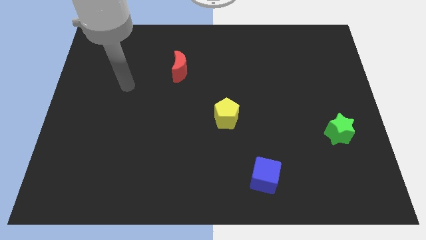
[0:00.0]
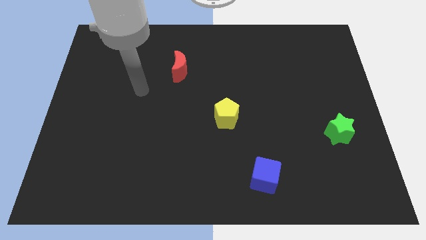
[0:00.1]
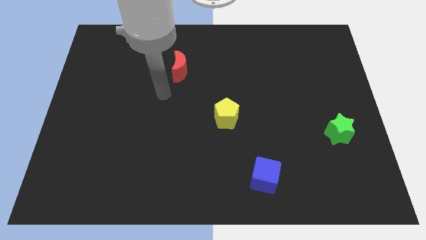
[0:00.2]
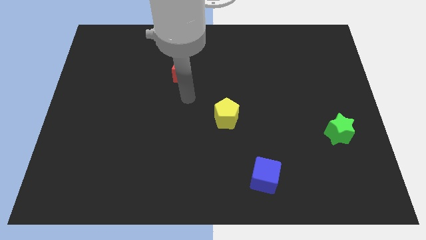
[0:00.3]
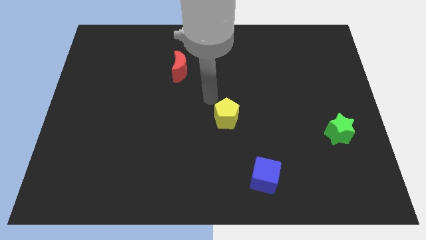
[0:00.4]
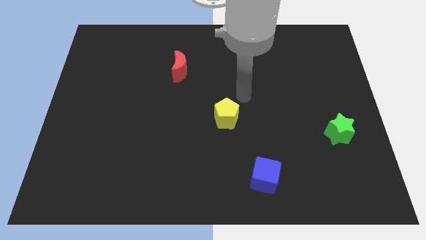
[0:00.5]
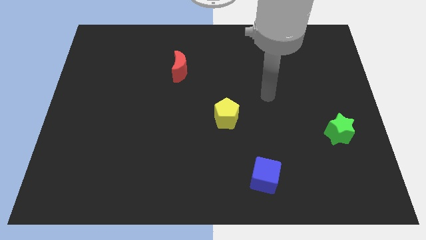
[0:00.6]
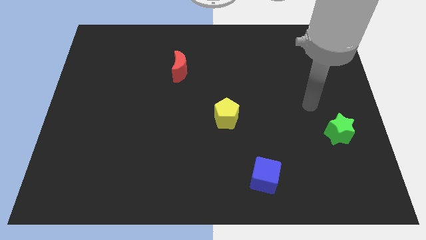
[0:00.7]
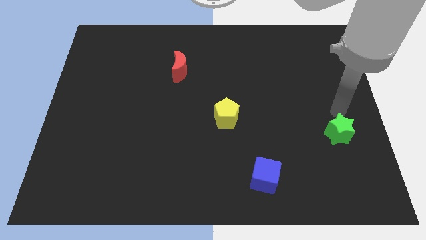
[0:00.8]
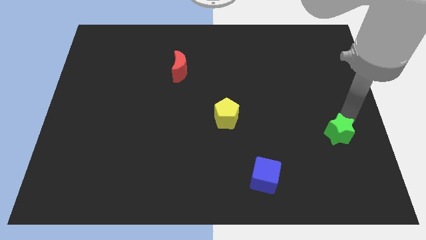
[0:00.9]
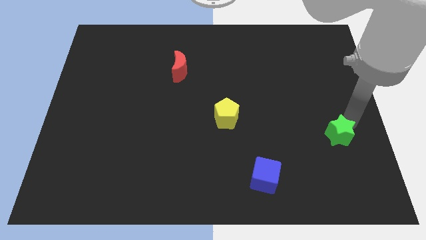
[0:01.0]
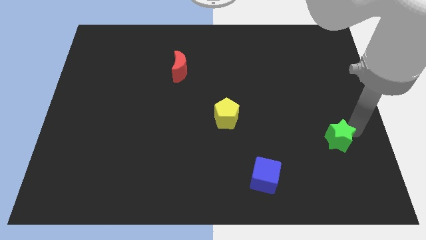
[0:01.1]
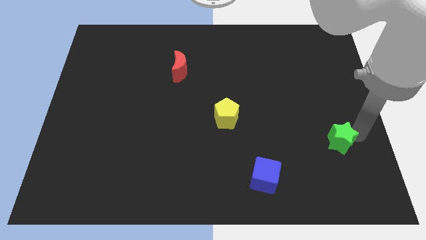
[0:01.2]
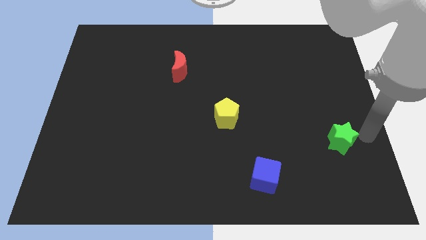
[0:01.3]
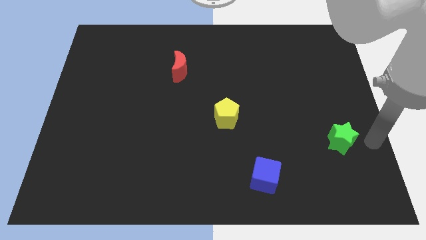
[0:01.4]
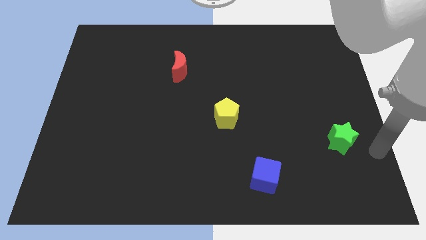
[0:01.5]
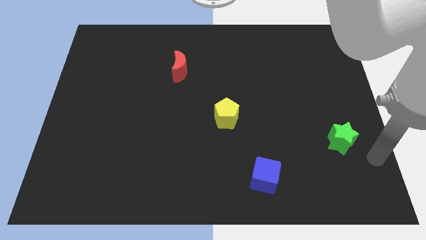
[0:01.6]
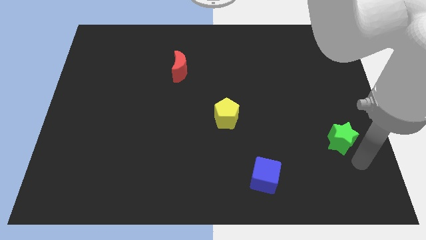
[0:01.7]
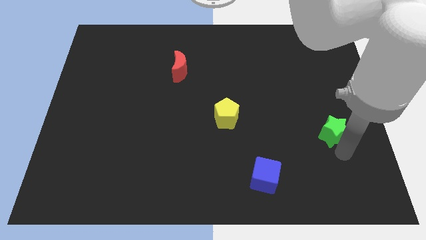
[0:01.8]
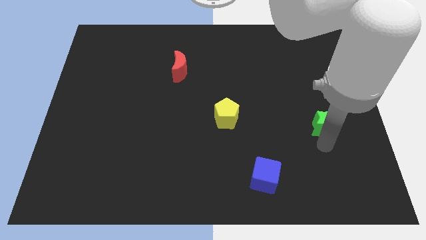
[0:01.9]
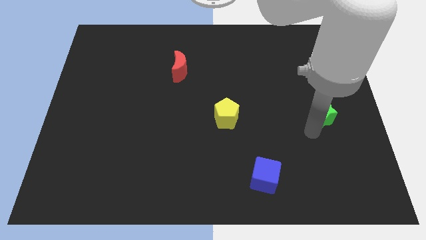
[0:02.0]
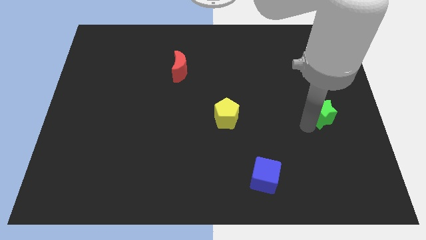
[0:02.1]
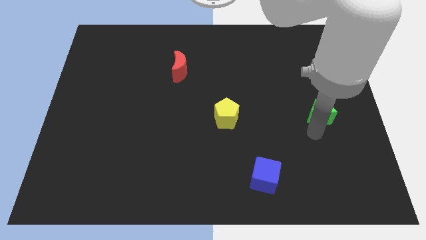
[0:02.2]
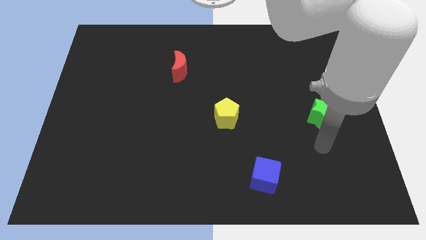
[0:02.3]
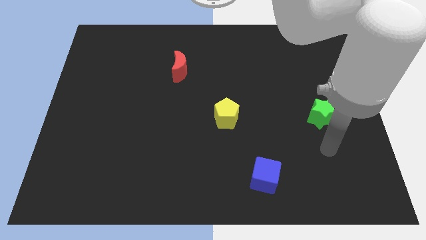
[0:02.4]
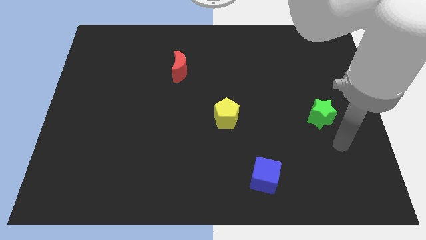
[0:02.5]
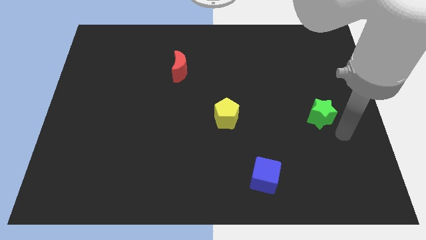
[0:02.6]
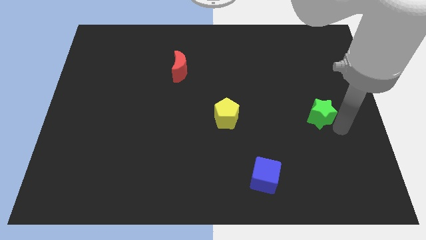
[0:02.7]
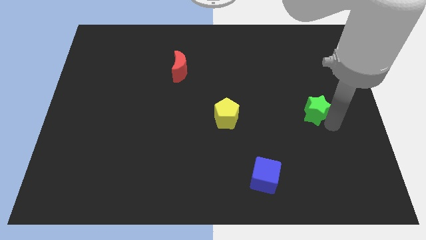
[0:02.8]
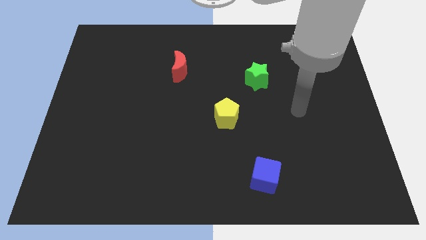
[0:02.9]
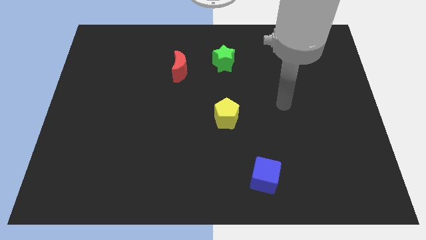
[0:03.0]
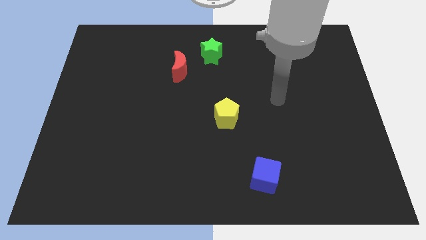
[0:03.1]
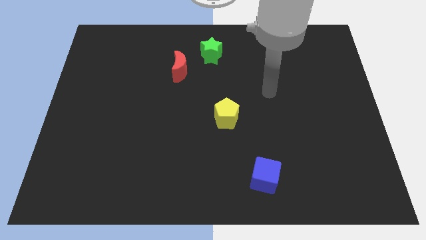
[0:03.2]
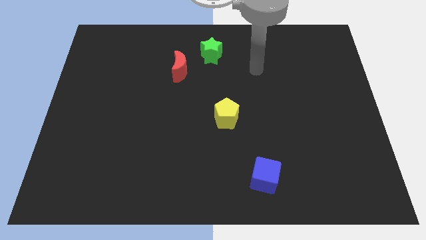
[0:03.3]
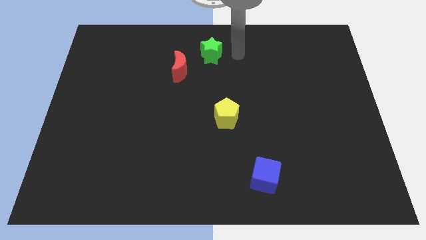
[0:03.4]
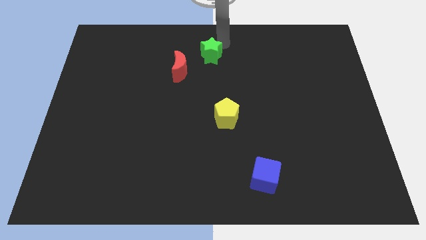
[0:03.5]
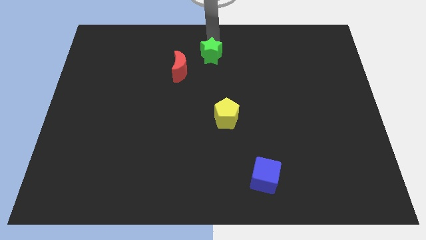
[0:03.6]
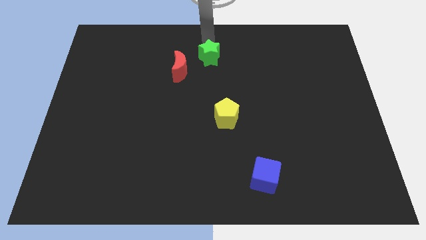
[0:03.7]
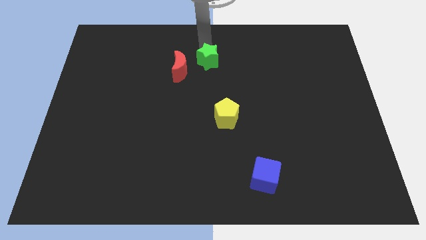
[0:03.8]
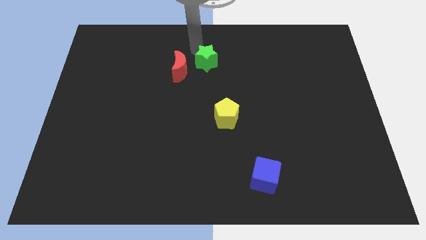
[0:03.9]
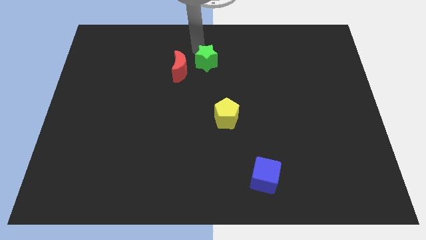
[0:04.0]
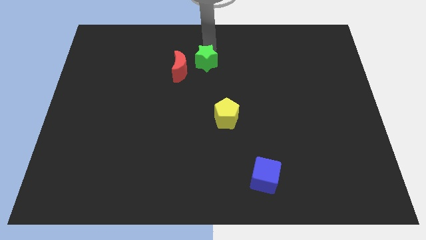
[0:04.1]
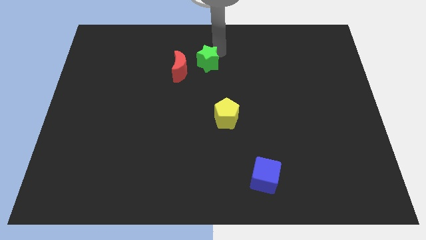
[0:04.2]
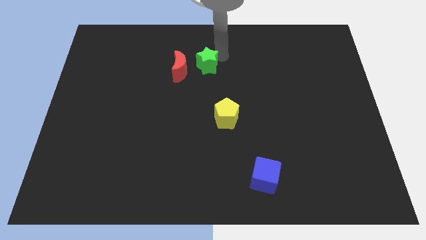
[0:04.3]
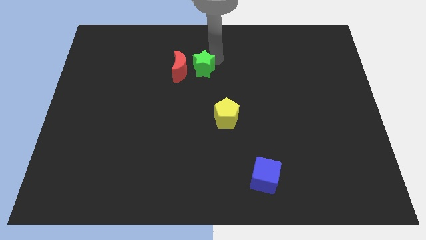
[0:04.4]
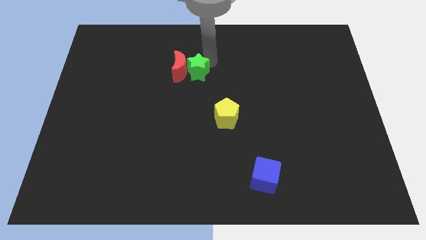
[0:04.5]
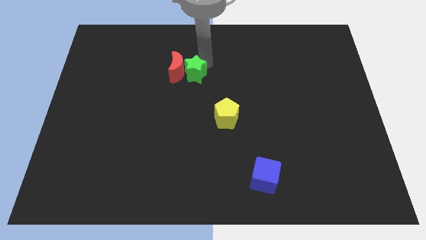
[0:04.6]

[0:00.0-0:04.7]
slide the green star to the moon

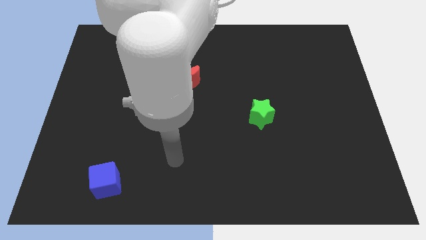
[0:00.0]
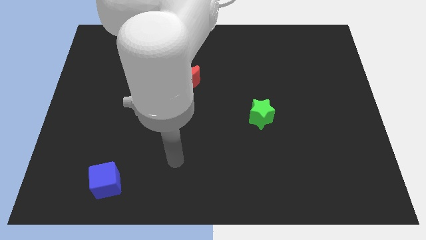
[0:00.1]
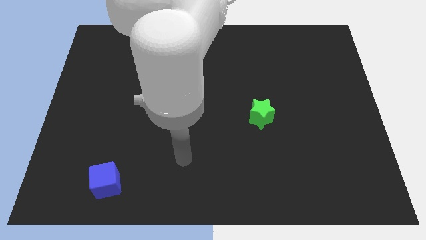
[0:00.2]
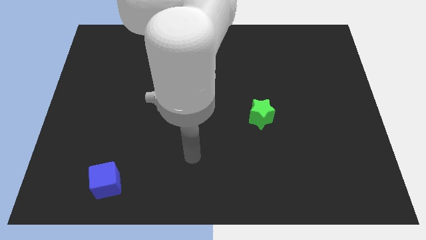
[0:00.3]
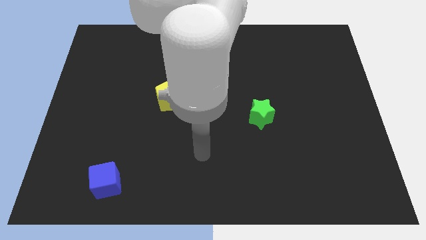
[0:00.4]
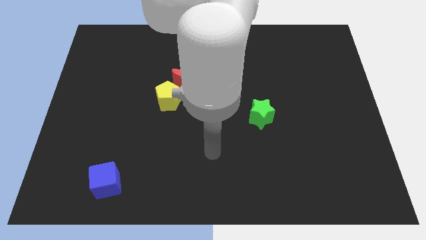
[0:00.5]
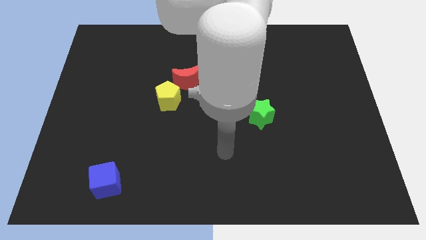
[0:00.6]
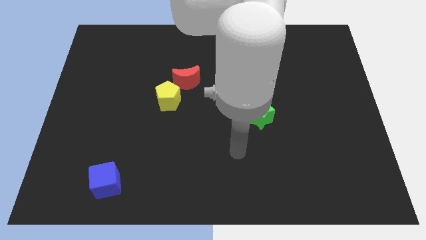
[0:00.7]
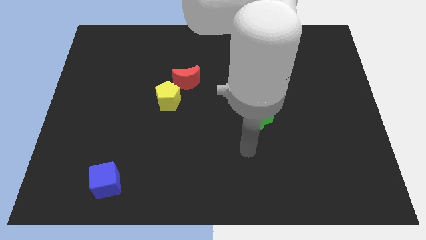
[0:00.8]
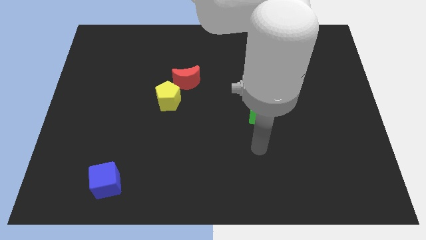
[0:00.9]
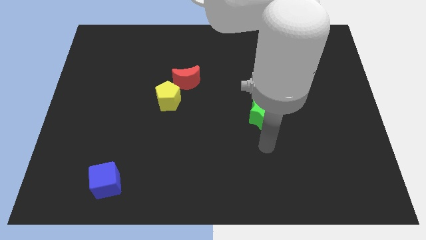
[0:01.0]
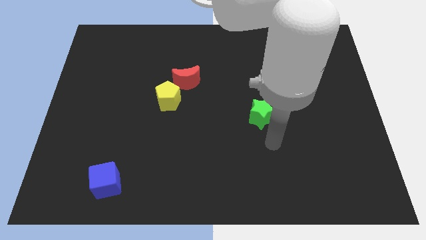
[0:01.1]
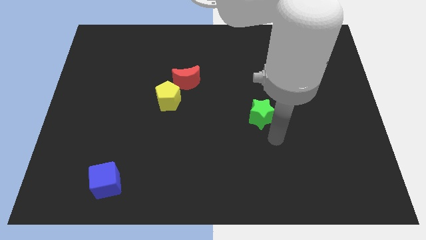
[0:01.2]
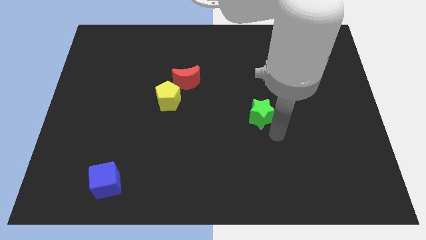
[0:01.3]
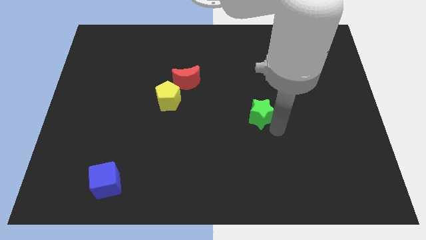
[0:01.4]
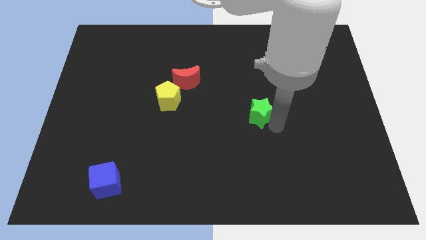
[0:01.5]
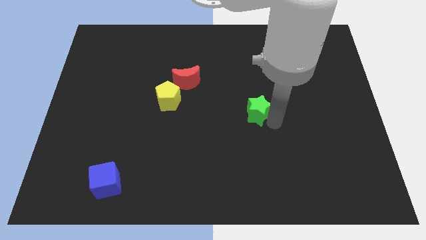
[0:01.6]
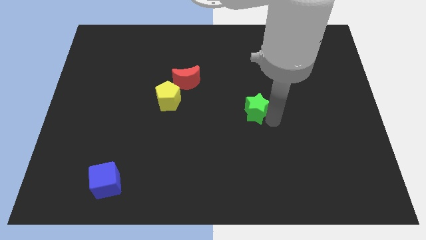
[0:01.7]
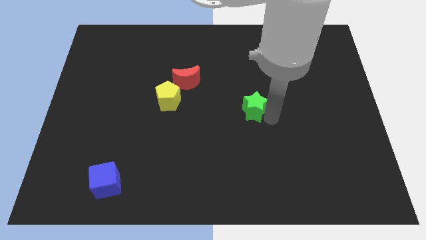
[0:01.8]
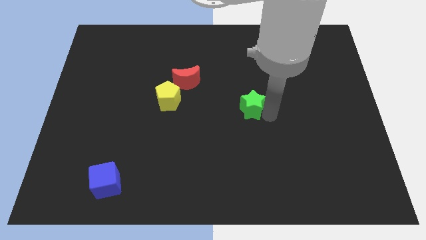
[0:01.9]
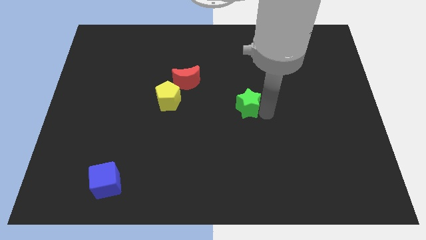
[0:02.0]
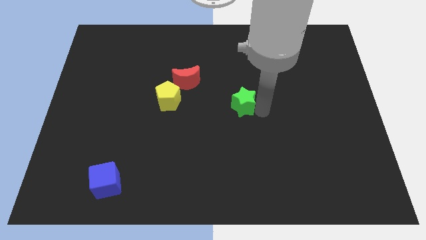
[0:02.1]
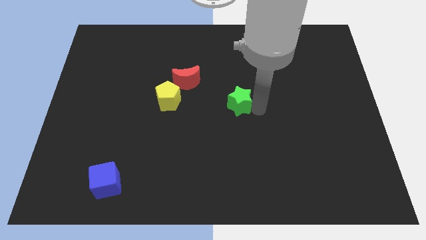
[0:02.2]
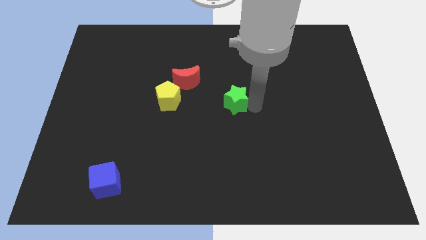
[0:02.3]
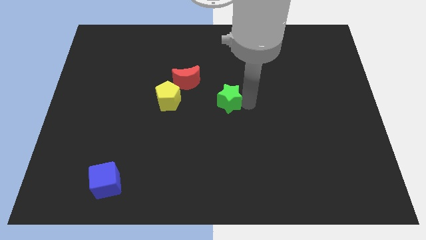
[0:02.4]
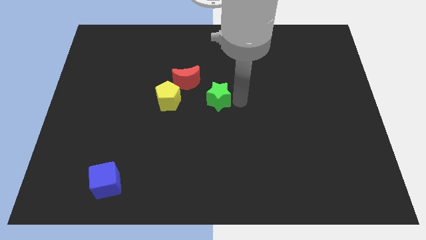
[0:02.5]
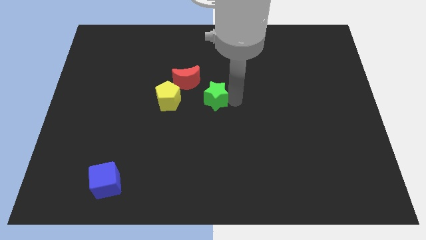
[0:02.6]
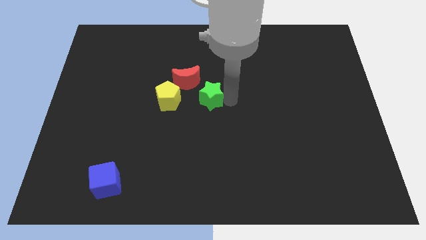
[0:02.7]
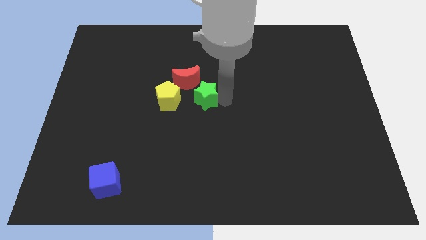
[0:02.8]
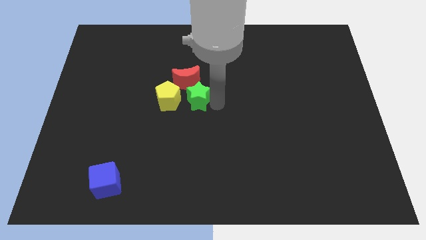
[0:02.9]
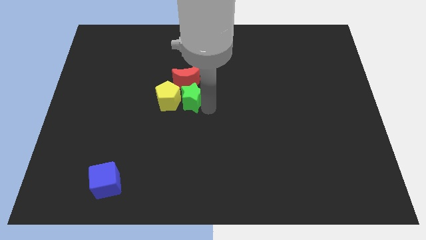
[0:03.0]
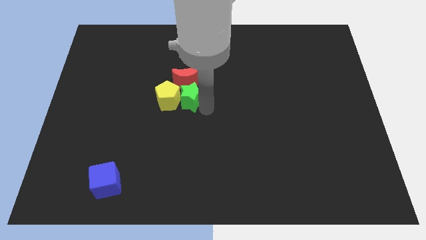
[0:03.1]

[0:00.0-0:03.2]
push the green star to the yellow pentagon

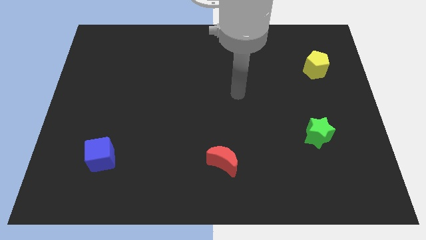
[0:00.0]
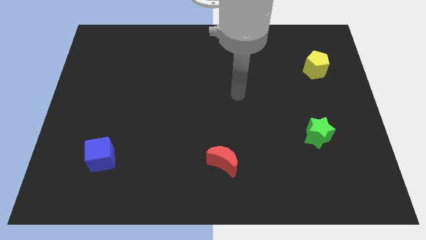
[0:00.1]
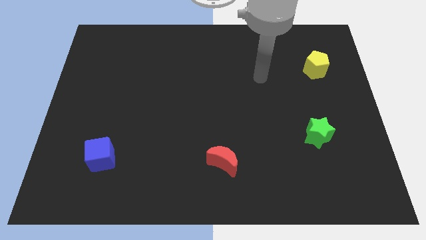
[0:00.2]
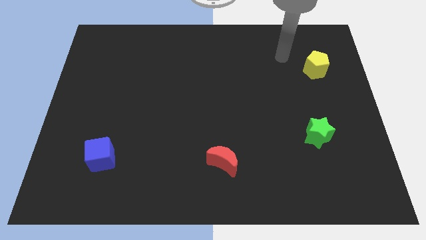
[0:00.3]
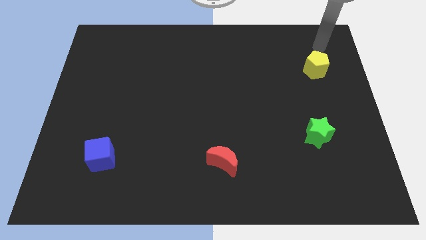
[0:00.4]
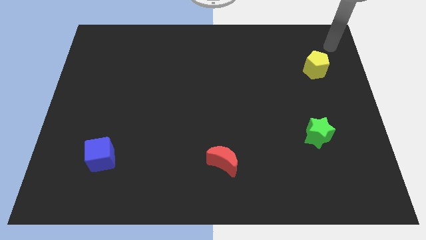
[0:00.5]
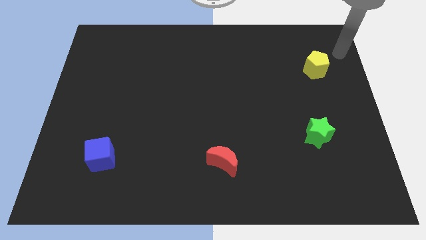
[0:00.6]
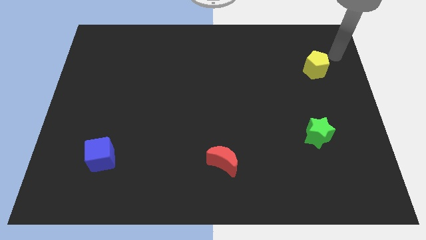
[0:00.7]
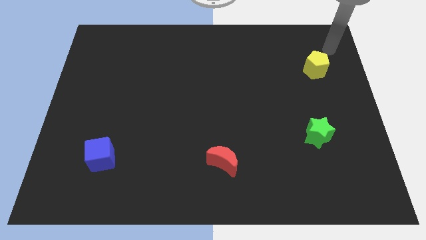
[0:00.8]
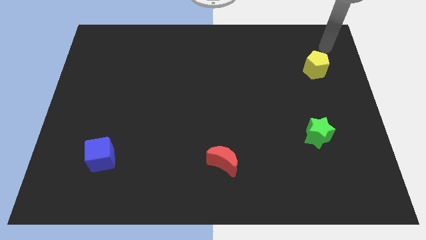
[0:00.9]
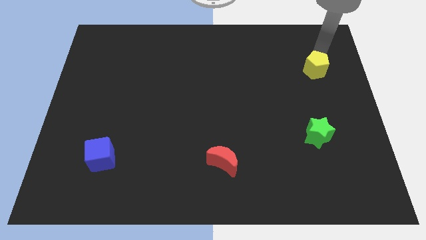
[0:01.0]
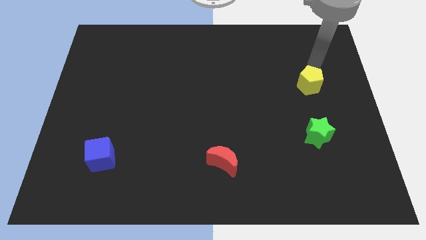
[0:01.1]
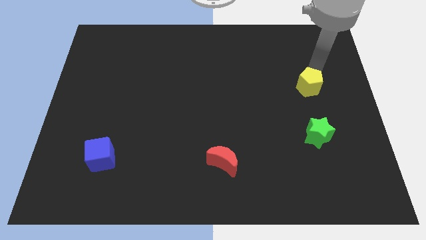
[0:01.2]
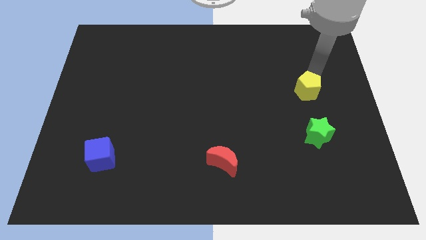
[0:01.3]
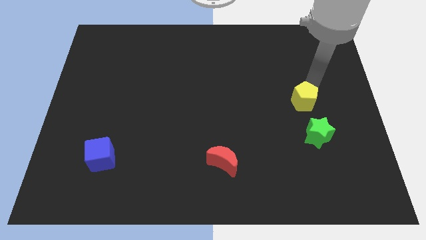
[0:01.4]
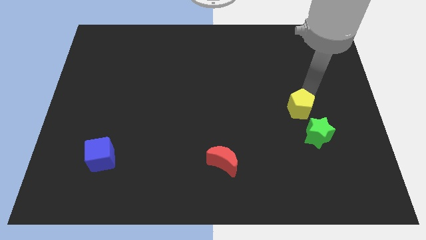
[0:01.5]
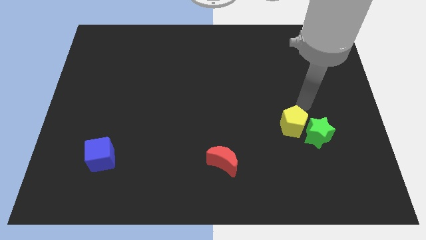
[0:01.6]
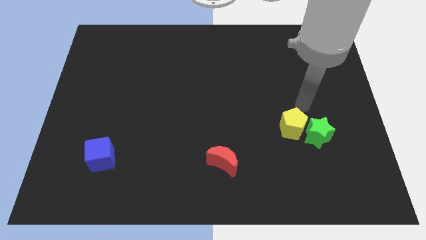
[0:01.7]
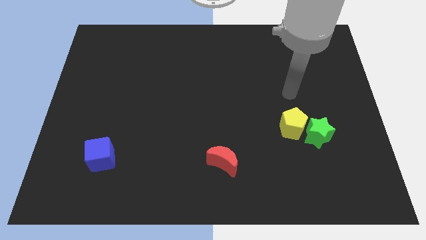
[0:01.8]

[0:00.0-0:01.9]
push the yellow pentagon next to the star
